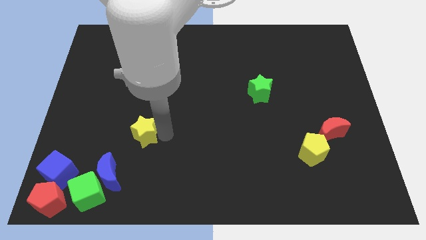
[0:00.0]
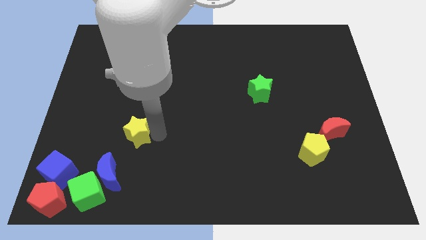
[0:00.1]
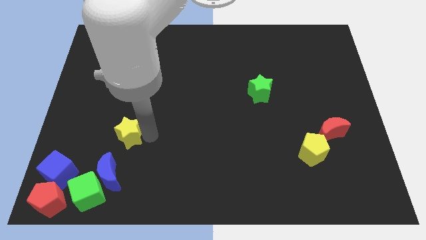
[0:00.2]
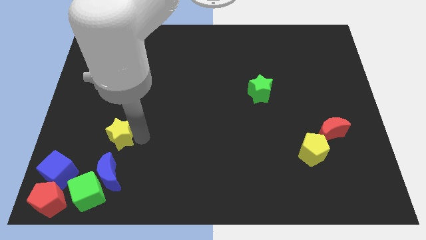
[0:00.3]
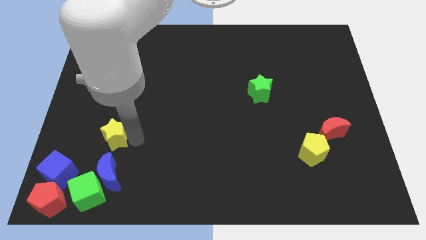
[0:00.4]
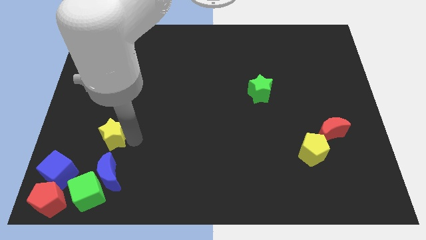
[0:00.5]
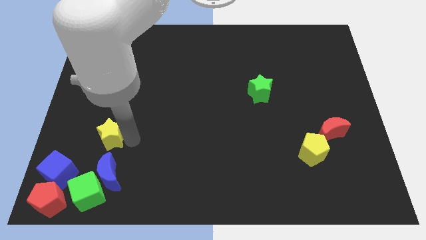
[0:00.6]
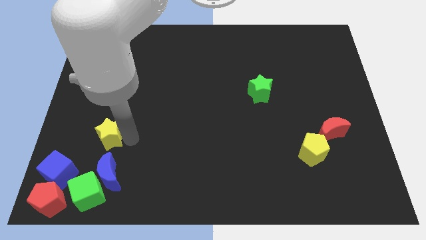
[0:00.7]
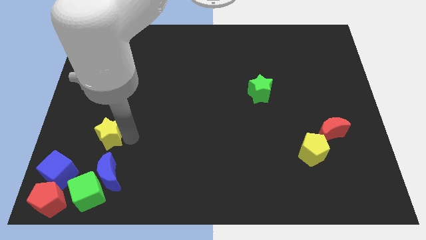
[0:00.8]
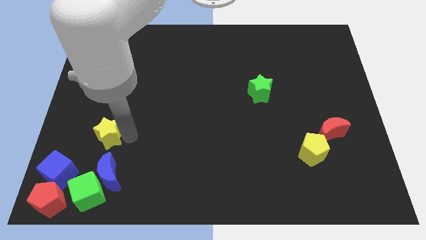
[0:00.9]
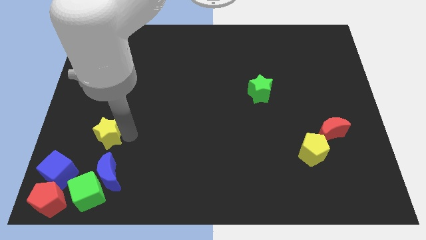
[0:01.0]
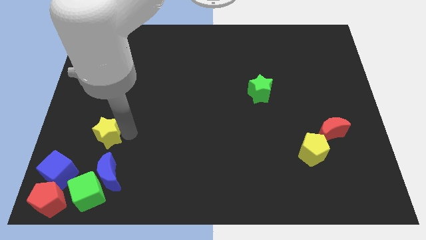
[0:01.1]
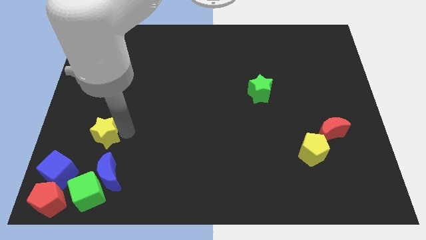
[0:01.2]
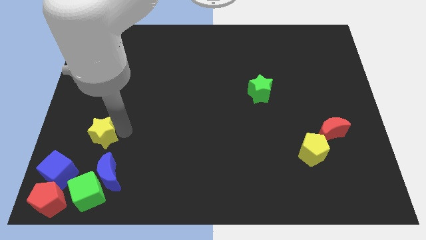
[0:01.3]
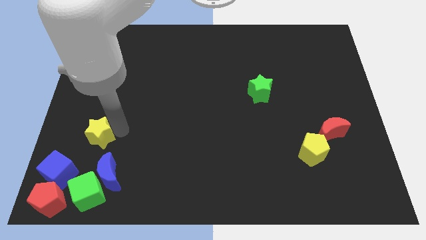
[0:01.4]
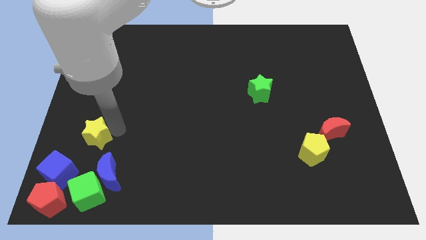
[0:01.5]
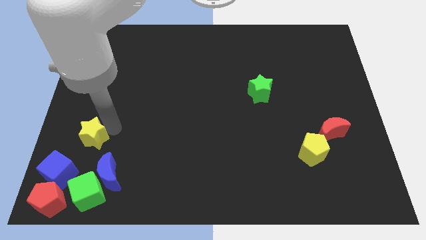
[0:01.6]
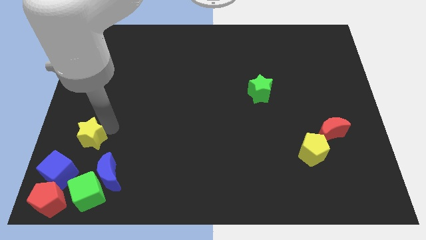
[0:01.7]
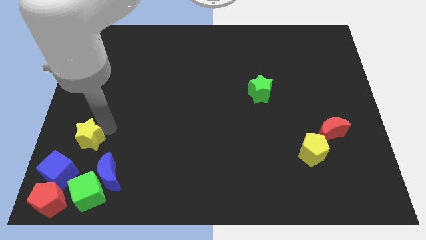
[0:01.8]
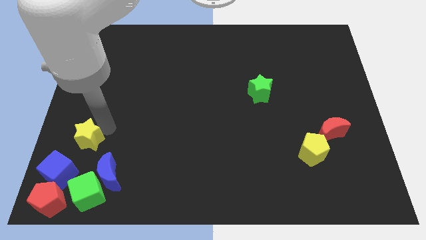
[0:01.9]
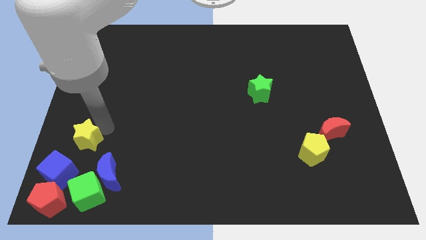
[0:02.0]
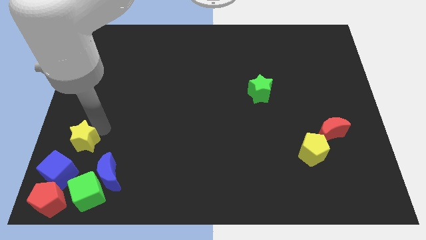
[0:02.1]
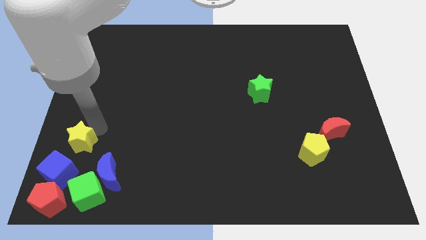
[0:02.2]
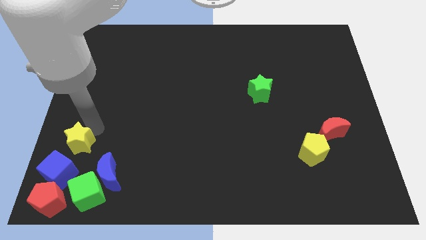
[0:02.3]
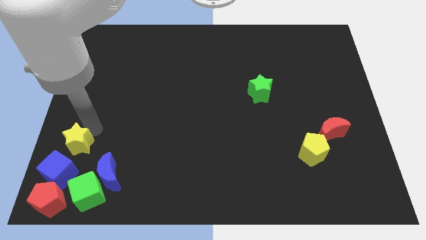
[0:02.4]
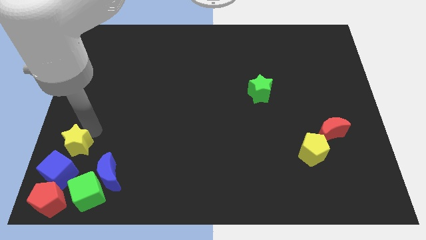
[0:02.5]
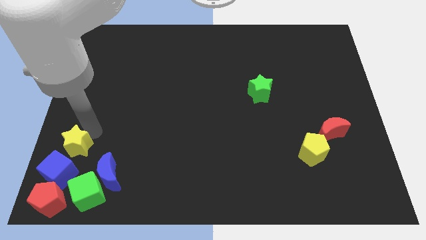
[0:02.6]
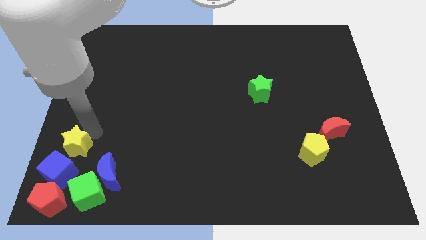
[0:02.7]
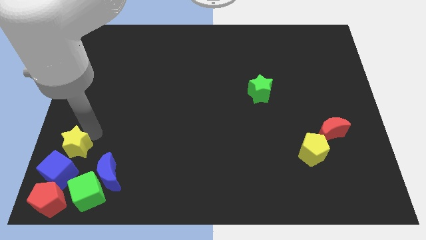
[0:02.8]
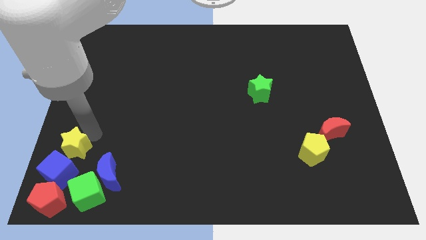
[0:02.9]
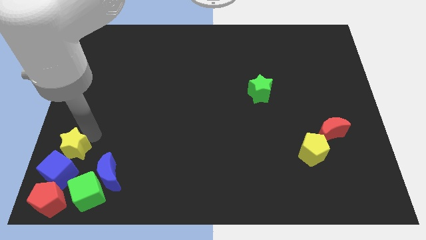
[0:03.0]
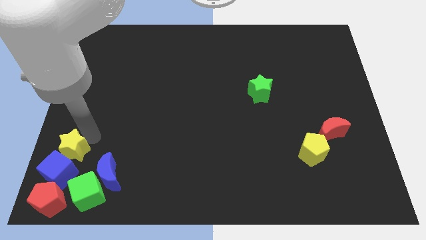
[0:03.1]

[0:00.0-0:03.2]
move the yellow star to the bottom left

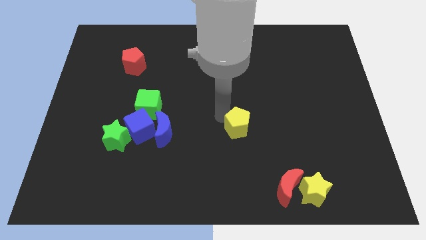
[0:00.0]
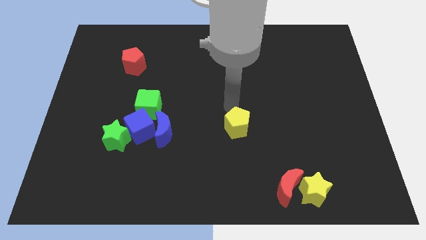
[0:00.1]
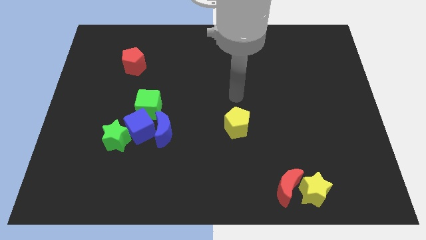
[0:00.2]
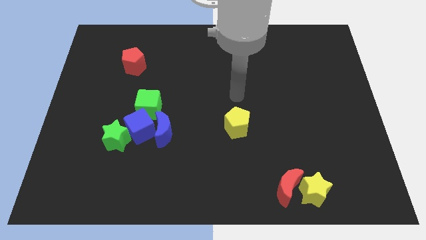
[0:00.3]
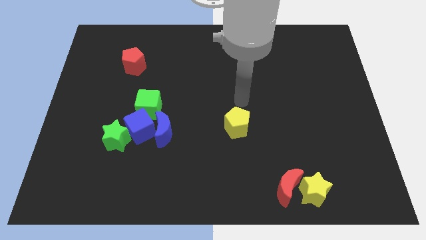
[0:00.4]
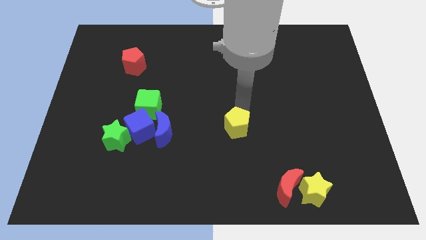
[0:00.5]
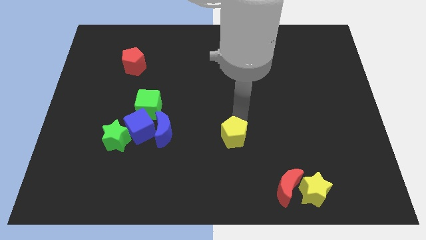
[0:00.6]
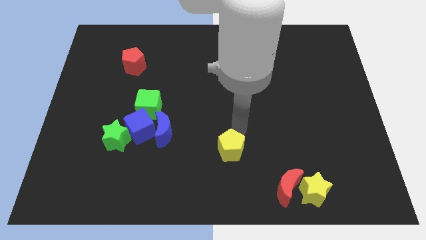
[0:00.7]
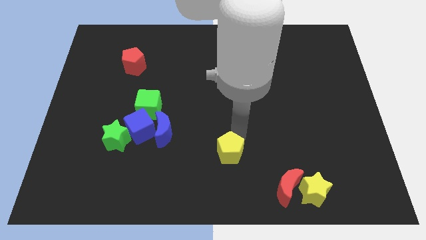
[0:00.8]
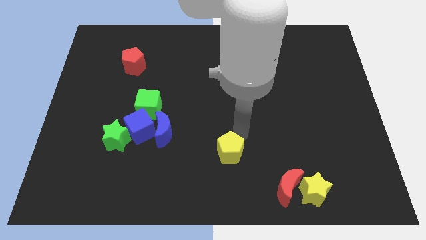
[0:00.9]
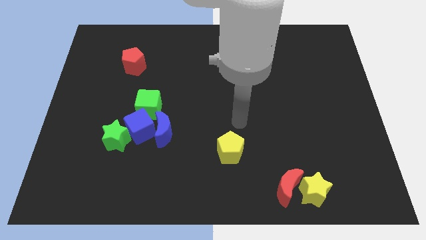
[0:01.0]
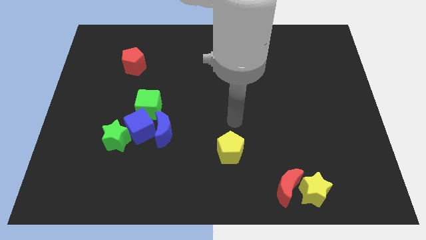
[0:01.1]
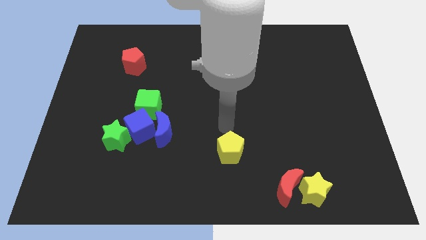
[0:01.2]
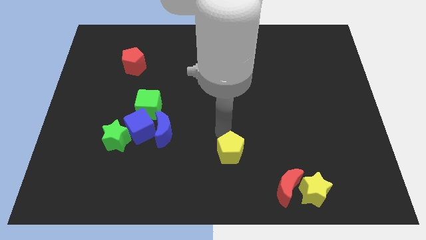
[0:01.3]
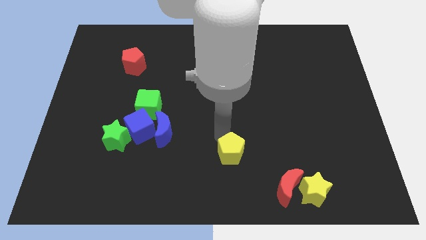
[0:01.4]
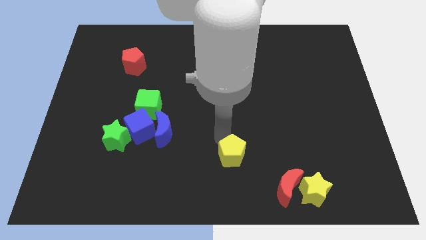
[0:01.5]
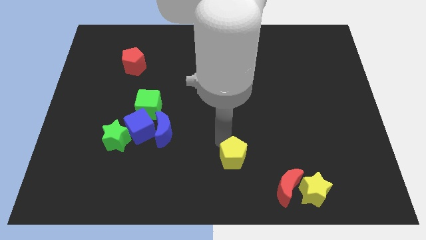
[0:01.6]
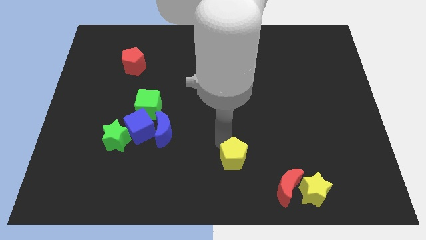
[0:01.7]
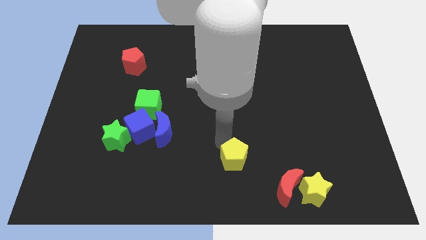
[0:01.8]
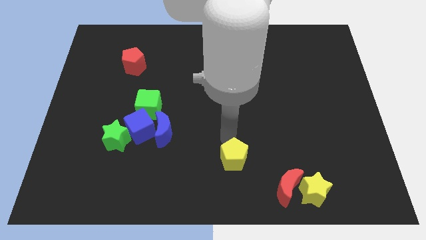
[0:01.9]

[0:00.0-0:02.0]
push the yellow pentagon towards the bottom center of the board

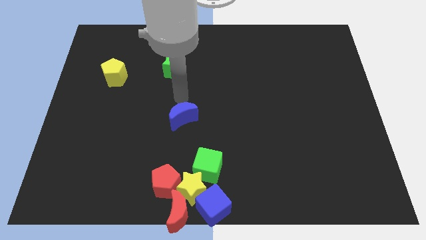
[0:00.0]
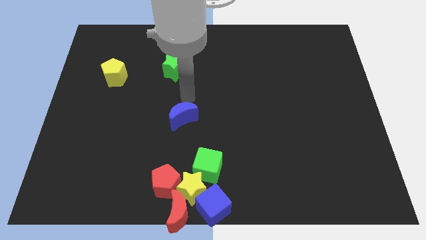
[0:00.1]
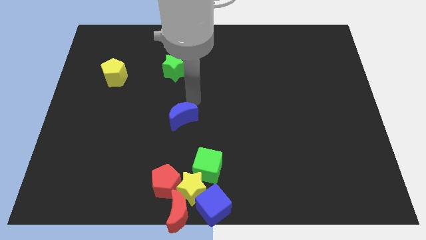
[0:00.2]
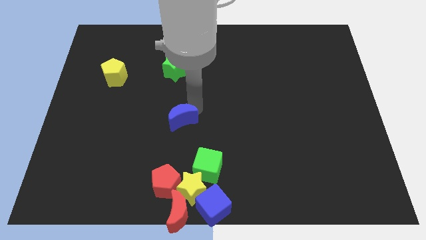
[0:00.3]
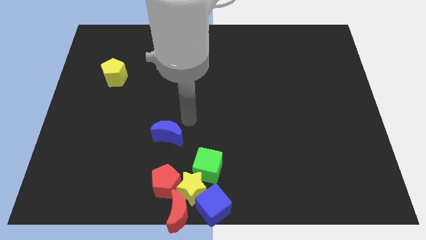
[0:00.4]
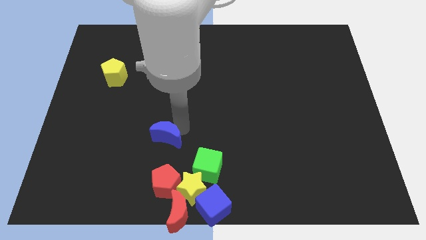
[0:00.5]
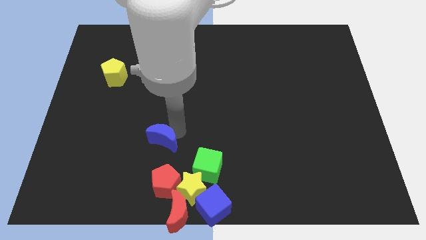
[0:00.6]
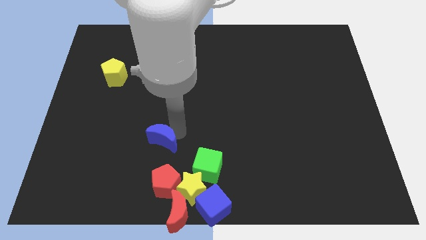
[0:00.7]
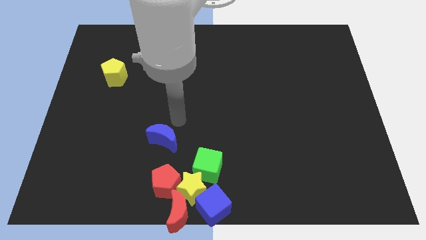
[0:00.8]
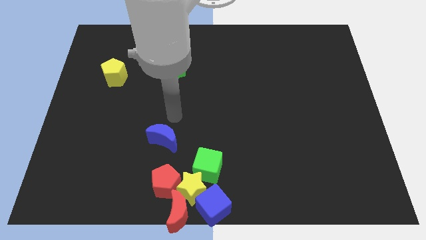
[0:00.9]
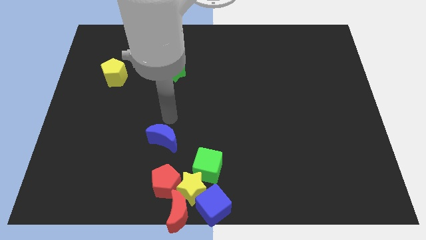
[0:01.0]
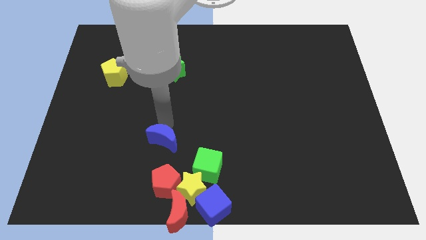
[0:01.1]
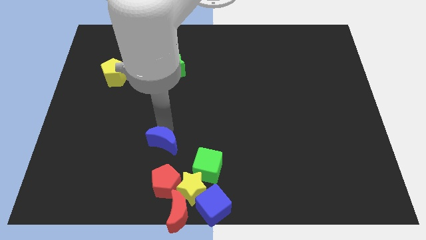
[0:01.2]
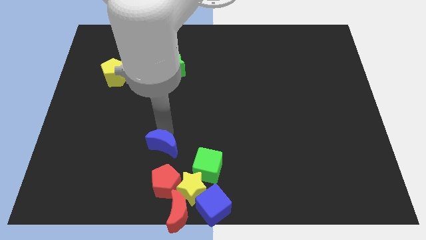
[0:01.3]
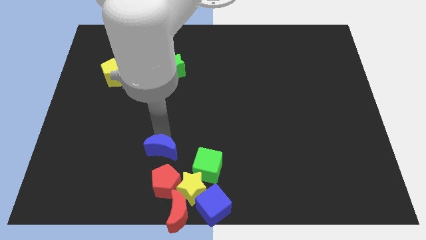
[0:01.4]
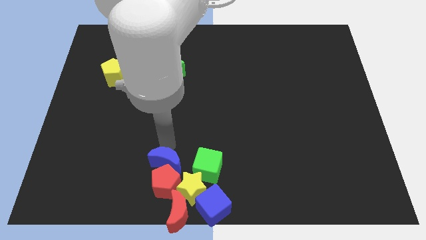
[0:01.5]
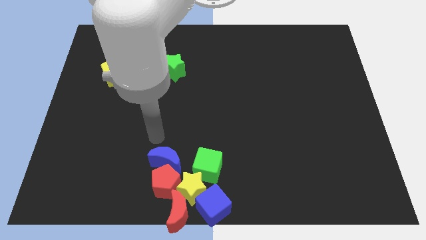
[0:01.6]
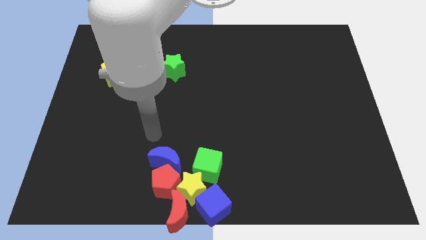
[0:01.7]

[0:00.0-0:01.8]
place the blue crescent on top of the red pentagon

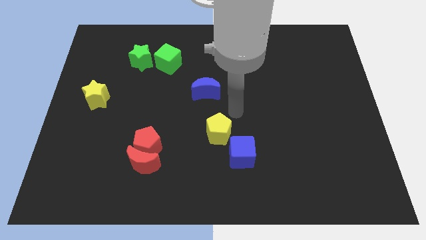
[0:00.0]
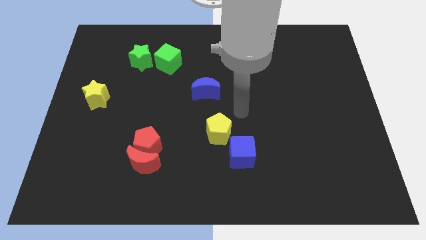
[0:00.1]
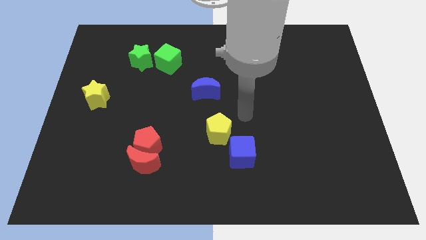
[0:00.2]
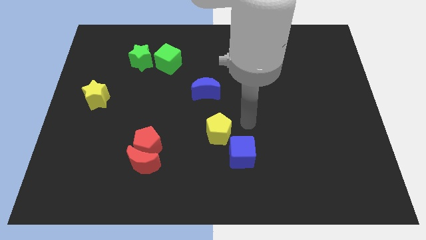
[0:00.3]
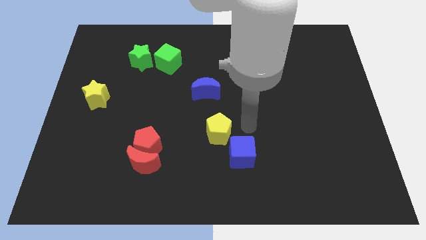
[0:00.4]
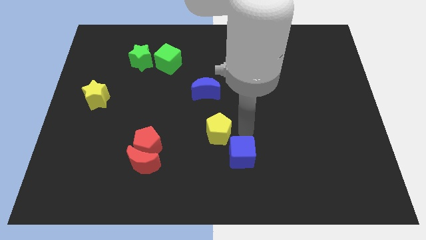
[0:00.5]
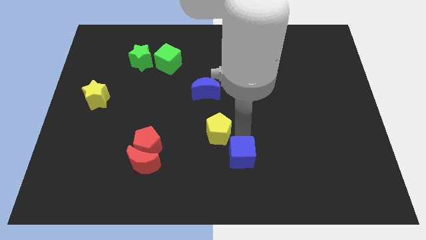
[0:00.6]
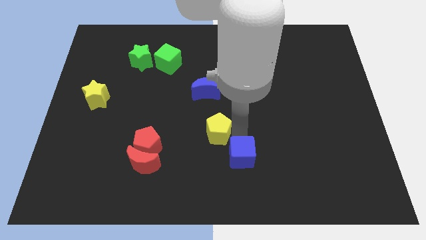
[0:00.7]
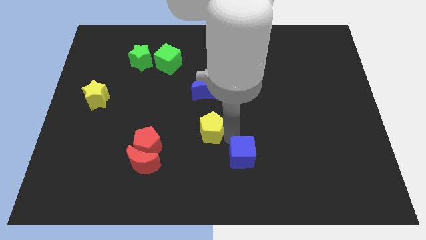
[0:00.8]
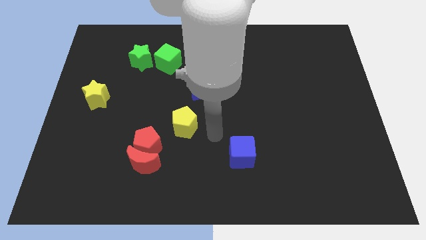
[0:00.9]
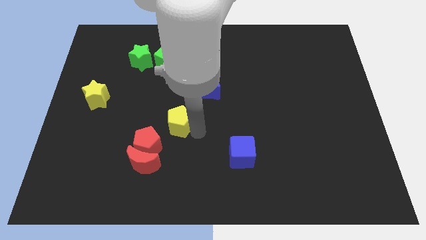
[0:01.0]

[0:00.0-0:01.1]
push the yellow pentagon to the bottom left of the blue crescent

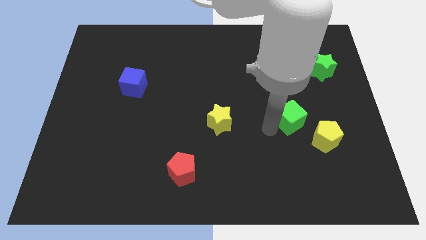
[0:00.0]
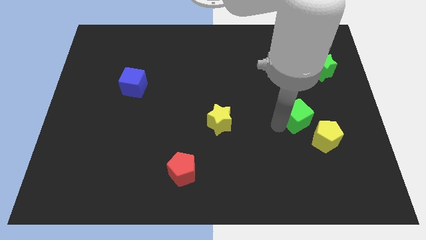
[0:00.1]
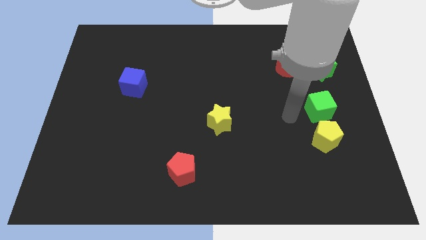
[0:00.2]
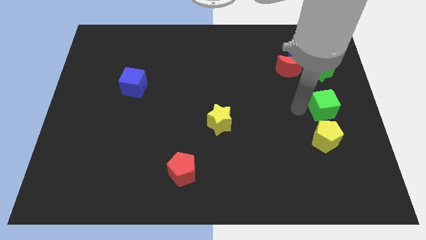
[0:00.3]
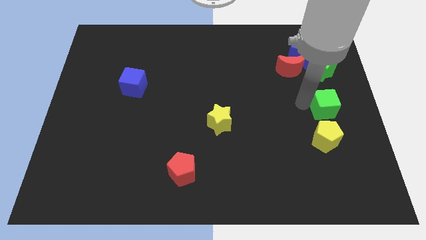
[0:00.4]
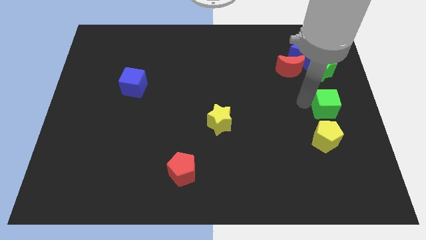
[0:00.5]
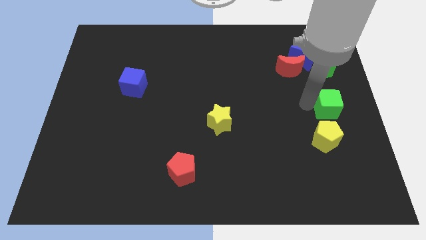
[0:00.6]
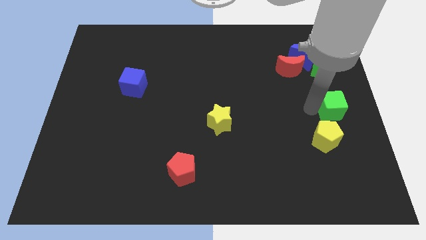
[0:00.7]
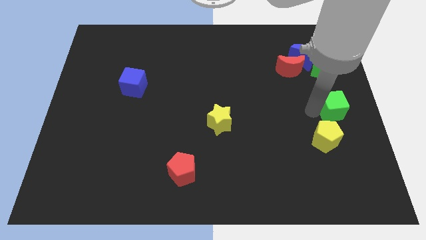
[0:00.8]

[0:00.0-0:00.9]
place the green cube in between the green star and yellow pentagon
